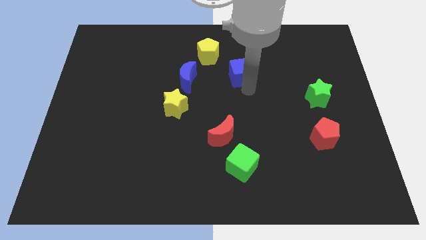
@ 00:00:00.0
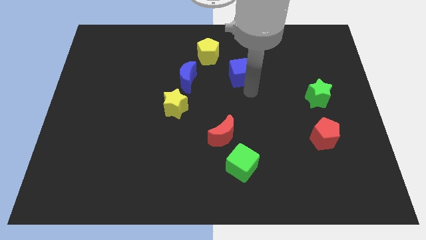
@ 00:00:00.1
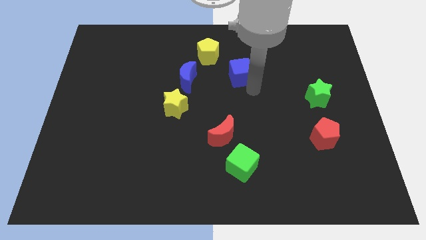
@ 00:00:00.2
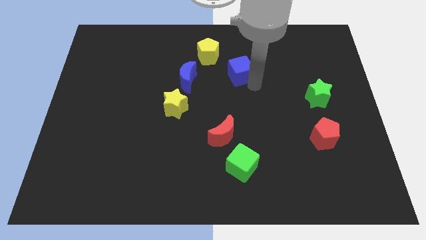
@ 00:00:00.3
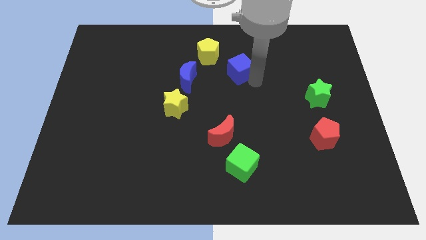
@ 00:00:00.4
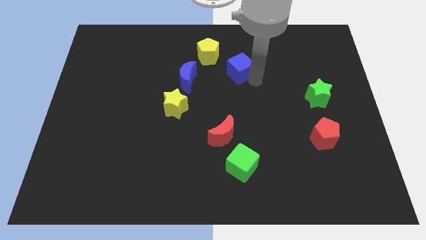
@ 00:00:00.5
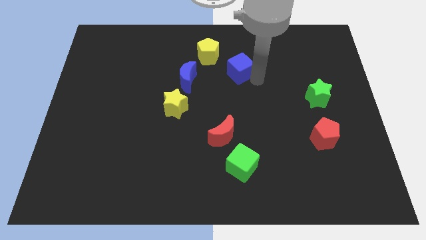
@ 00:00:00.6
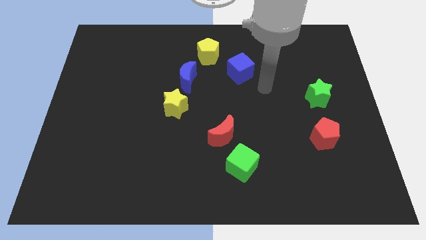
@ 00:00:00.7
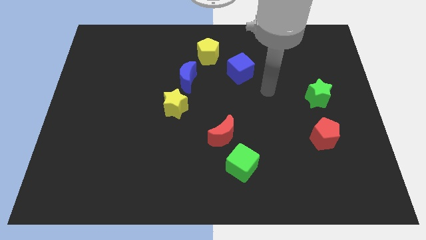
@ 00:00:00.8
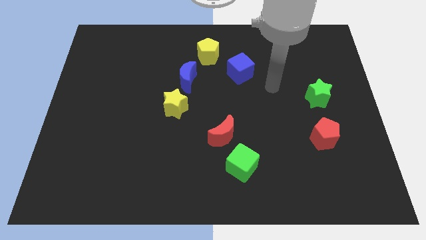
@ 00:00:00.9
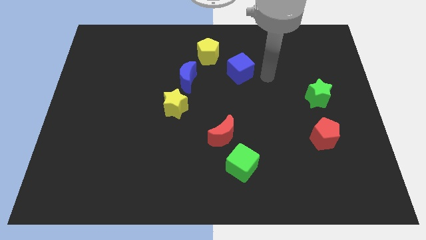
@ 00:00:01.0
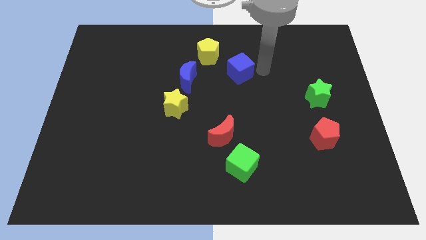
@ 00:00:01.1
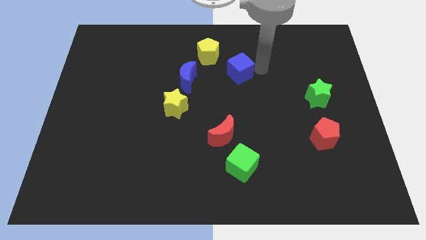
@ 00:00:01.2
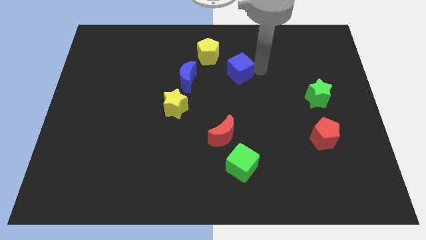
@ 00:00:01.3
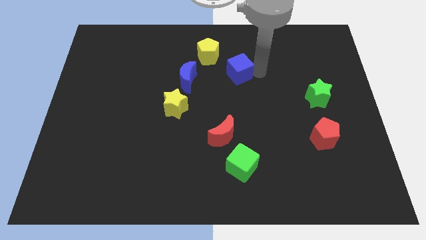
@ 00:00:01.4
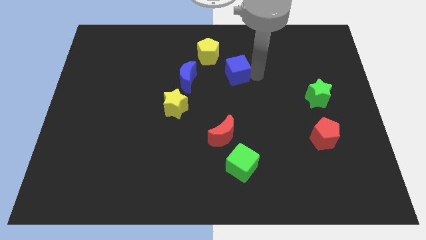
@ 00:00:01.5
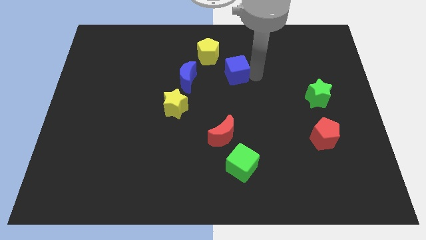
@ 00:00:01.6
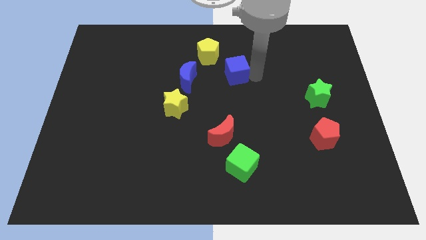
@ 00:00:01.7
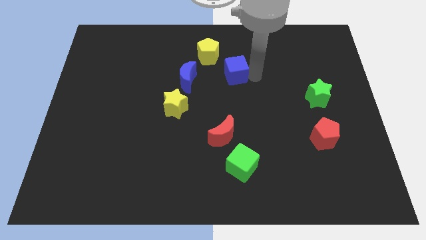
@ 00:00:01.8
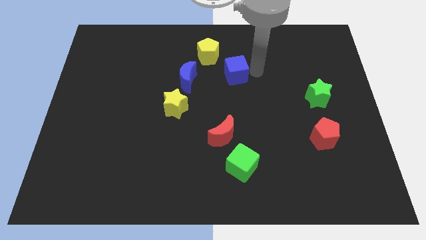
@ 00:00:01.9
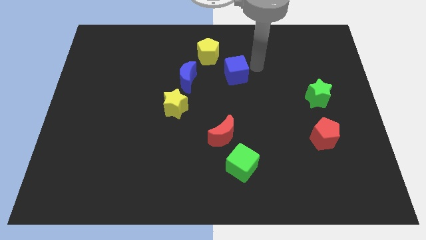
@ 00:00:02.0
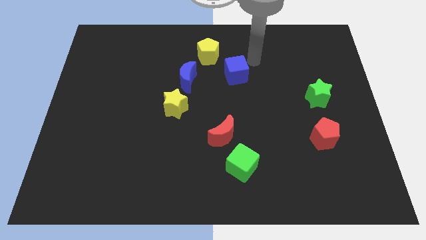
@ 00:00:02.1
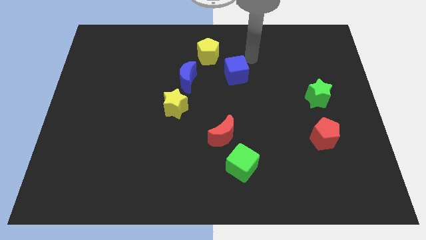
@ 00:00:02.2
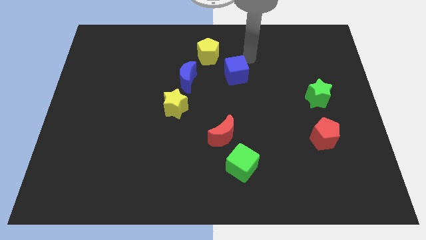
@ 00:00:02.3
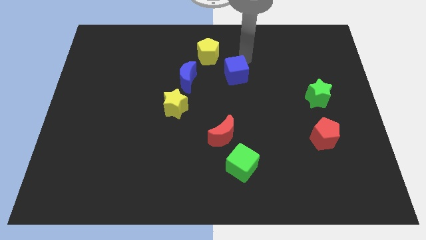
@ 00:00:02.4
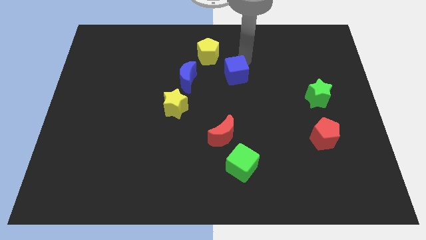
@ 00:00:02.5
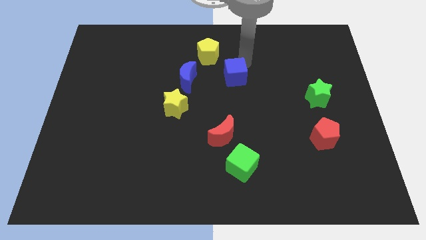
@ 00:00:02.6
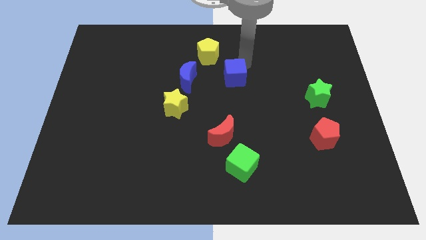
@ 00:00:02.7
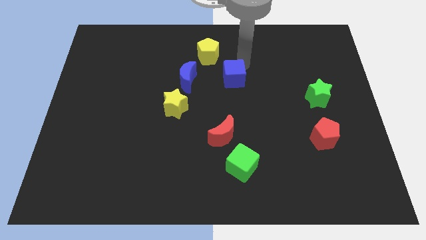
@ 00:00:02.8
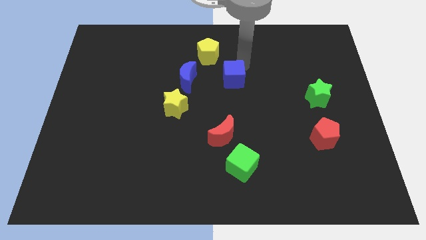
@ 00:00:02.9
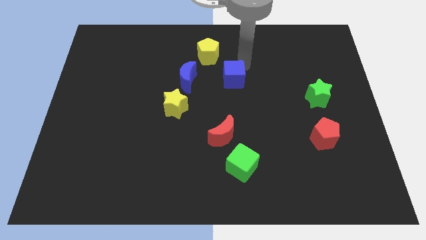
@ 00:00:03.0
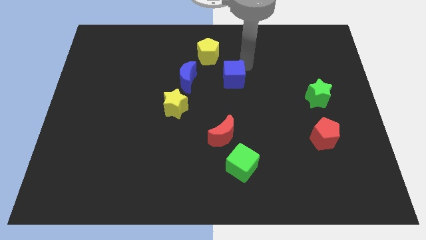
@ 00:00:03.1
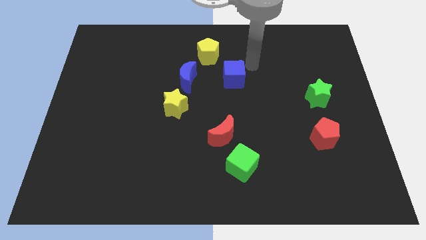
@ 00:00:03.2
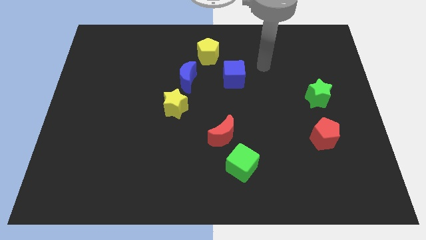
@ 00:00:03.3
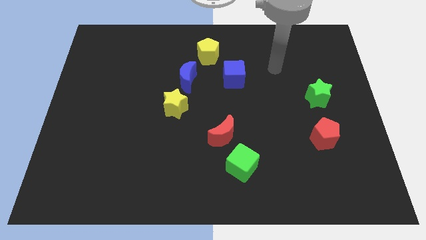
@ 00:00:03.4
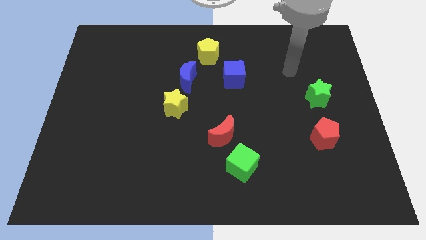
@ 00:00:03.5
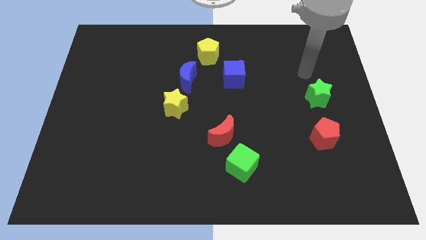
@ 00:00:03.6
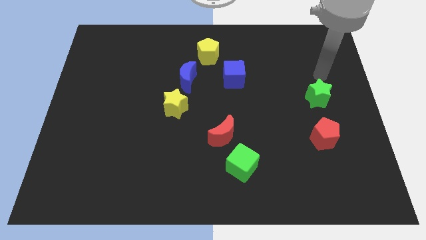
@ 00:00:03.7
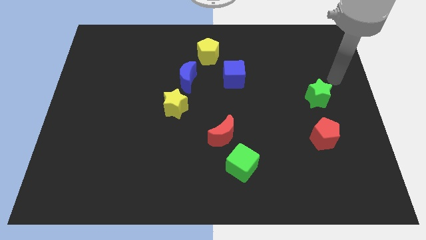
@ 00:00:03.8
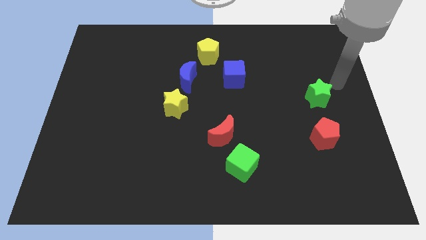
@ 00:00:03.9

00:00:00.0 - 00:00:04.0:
adjust the blue cube vertically above the red crescent

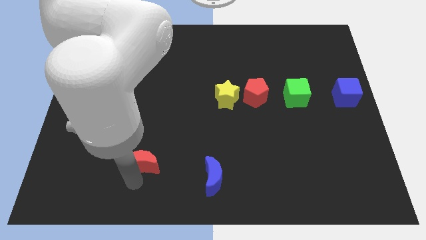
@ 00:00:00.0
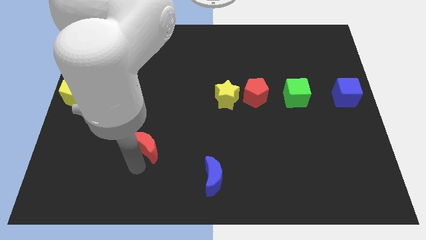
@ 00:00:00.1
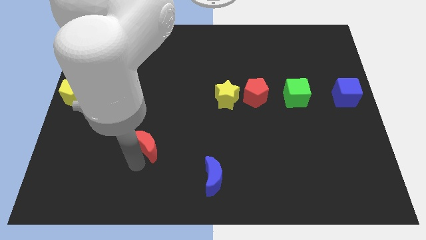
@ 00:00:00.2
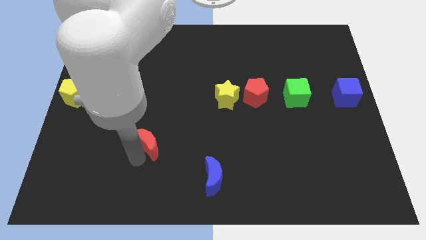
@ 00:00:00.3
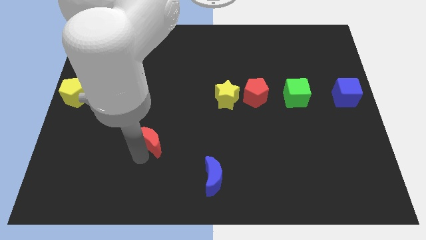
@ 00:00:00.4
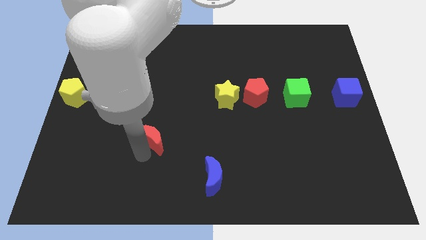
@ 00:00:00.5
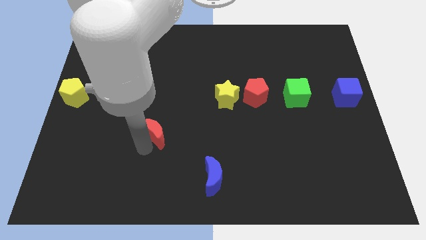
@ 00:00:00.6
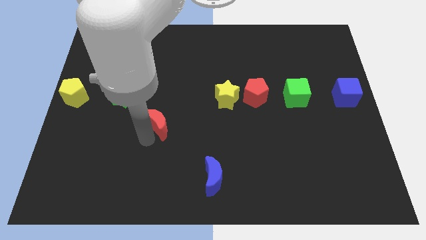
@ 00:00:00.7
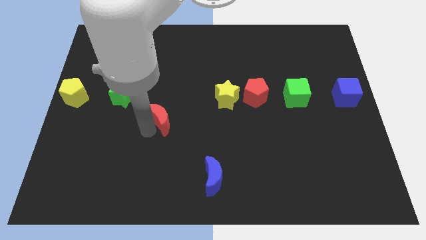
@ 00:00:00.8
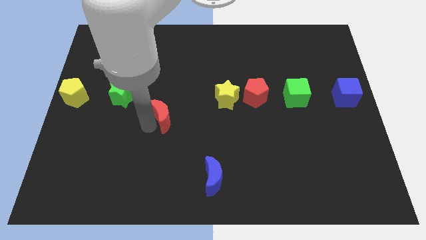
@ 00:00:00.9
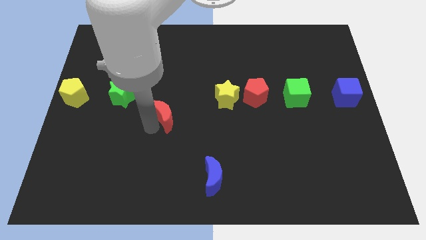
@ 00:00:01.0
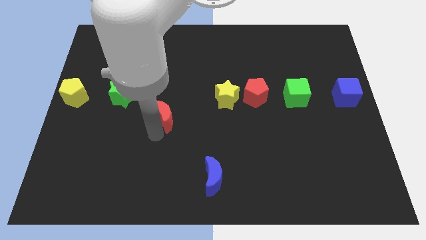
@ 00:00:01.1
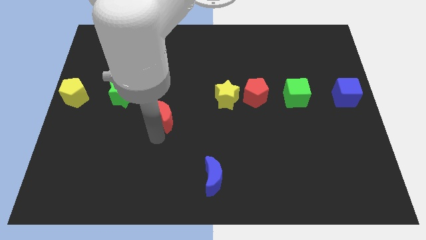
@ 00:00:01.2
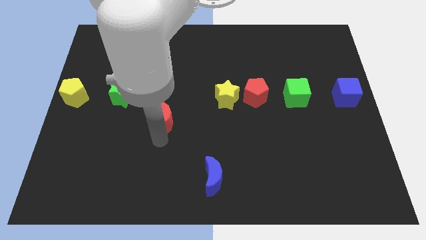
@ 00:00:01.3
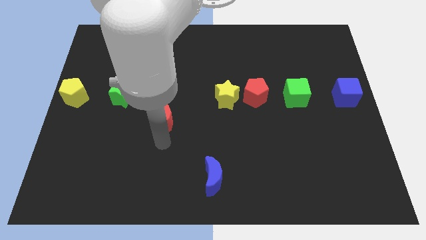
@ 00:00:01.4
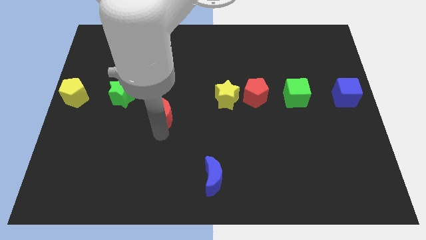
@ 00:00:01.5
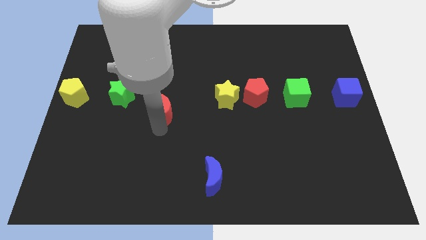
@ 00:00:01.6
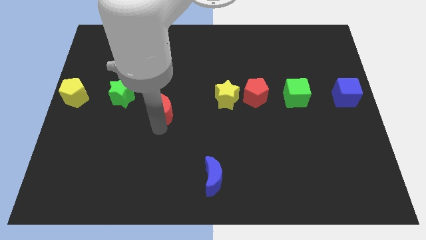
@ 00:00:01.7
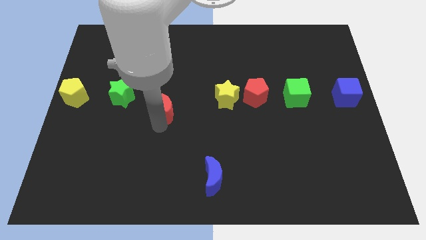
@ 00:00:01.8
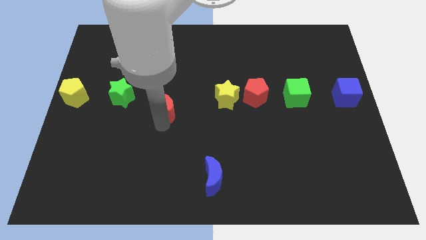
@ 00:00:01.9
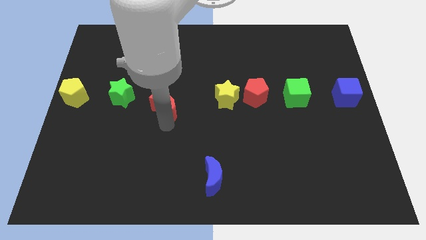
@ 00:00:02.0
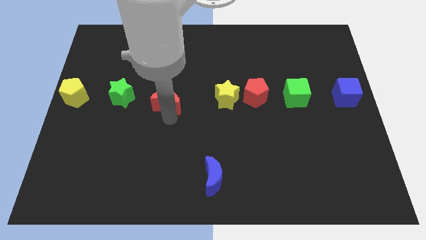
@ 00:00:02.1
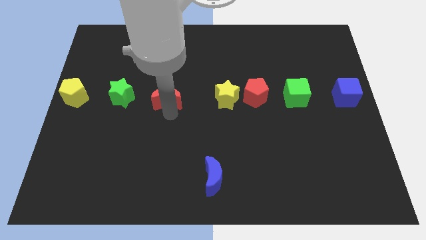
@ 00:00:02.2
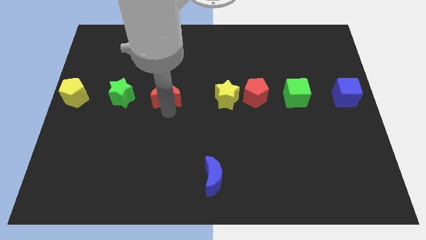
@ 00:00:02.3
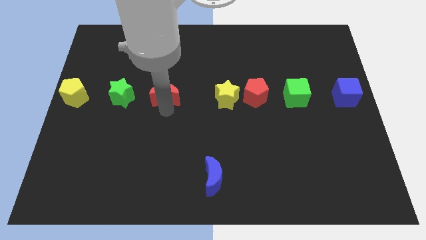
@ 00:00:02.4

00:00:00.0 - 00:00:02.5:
move the red crescent in between the green star and yellow star

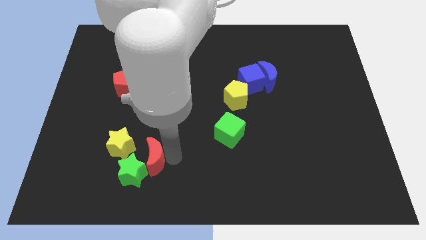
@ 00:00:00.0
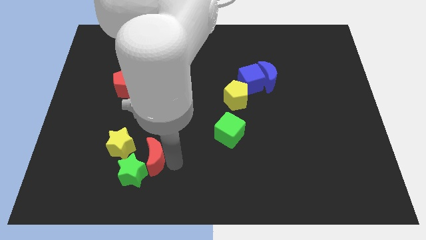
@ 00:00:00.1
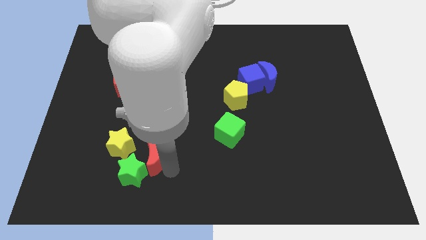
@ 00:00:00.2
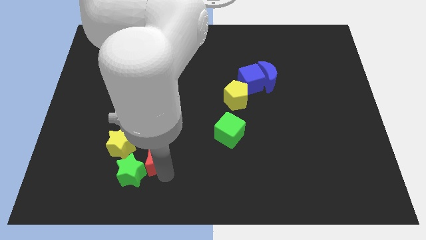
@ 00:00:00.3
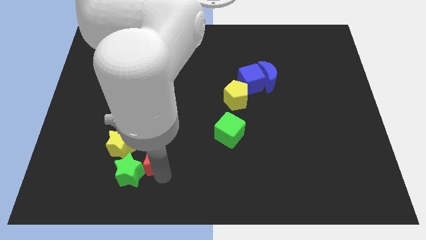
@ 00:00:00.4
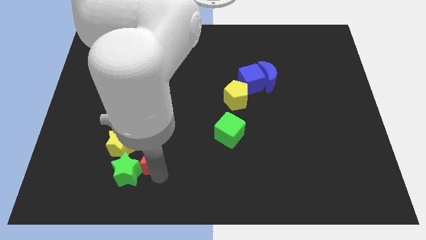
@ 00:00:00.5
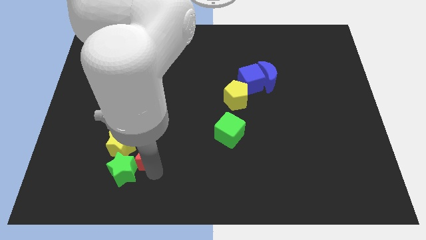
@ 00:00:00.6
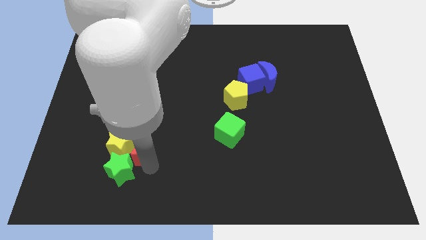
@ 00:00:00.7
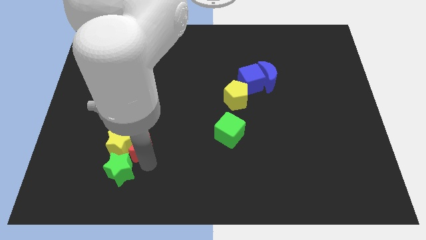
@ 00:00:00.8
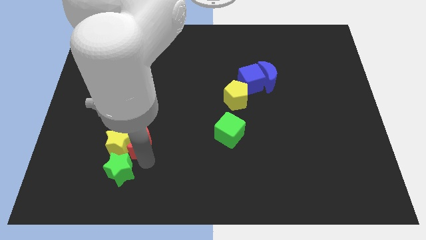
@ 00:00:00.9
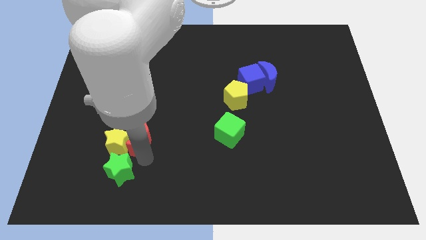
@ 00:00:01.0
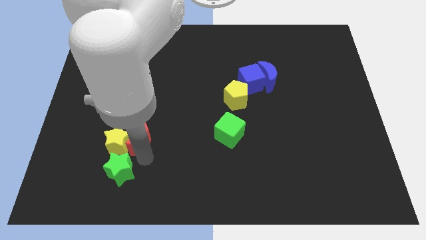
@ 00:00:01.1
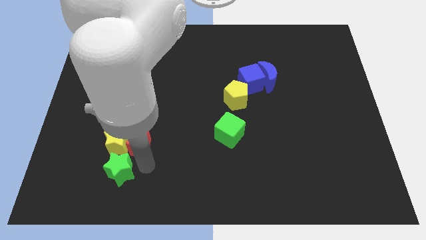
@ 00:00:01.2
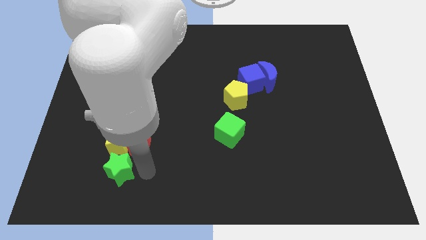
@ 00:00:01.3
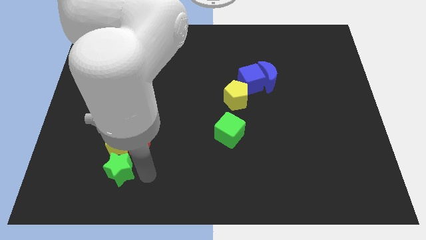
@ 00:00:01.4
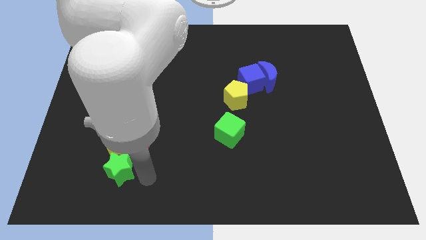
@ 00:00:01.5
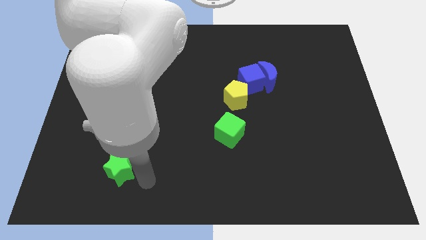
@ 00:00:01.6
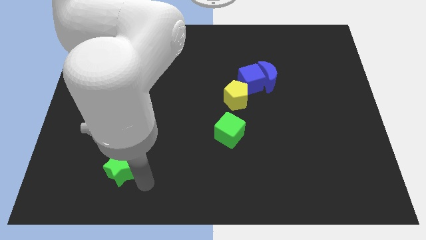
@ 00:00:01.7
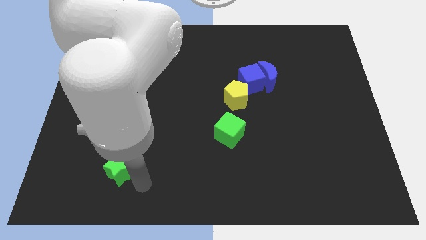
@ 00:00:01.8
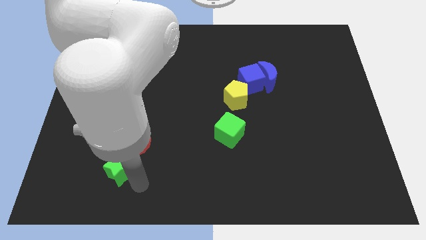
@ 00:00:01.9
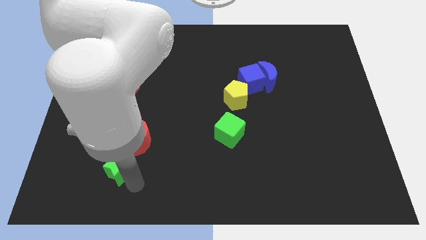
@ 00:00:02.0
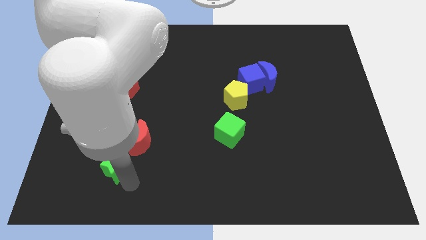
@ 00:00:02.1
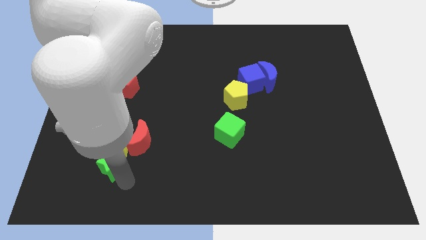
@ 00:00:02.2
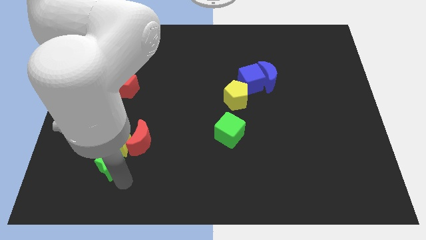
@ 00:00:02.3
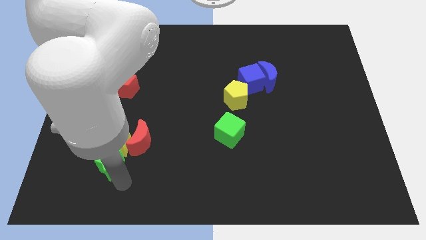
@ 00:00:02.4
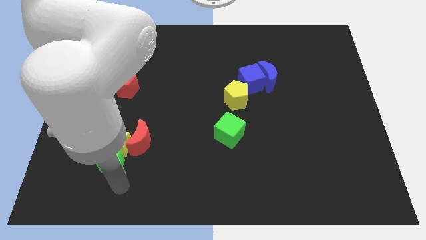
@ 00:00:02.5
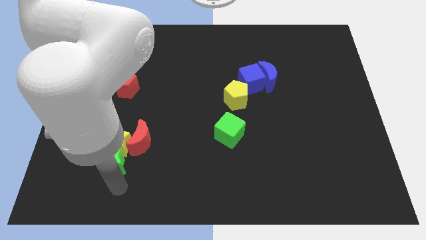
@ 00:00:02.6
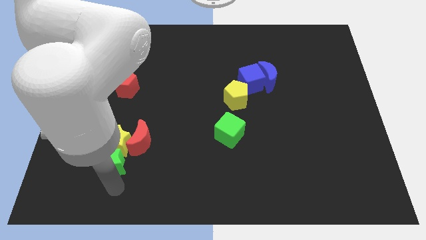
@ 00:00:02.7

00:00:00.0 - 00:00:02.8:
place red moon into yellow star
